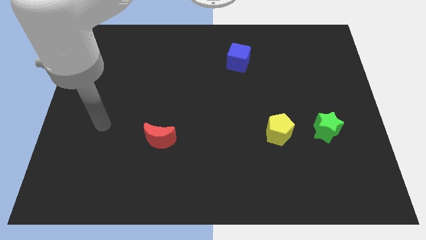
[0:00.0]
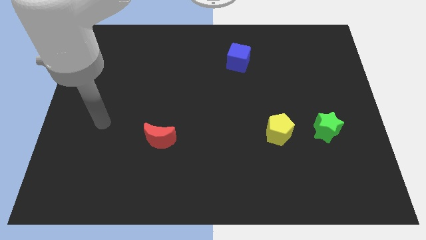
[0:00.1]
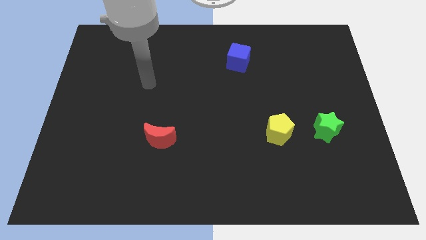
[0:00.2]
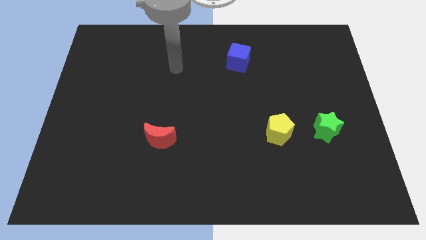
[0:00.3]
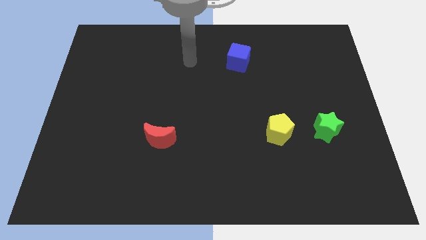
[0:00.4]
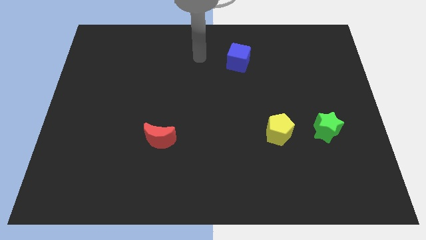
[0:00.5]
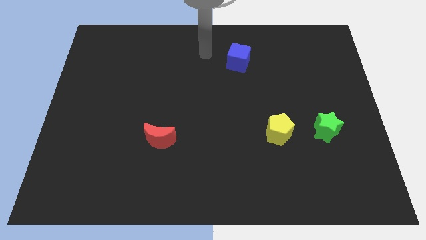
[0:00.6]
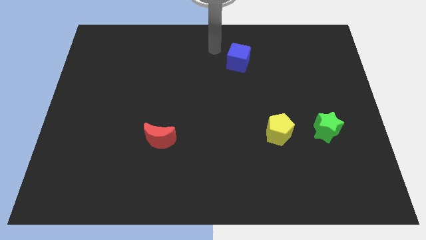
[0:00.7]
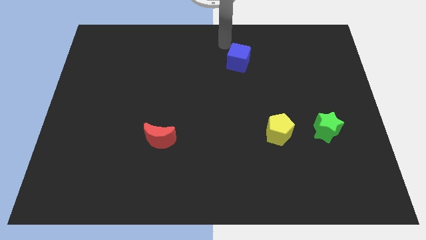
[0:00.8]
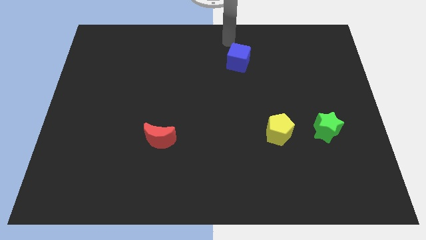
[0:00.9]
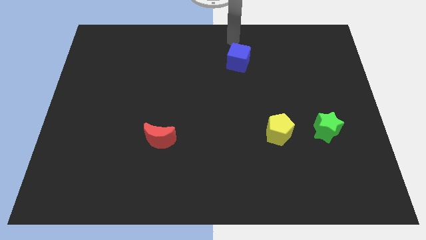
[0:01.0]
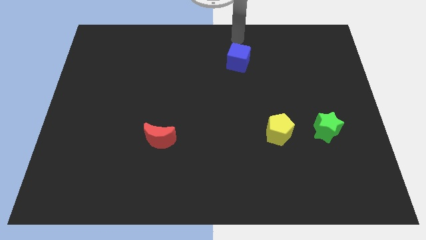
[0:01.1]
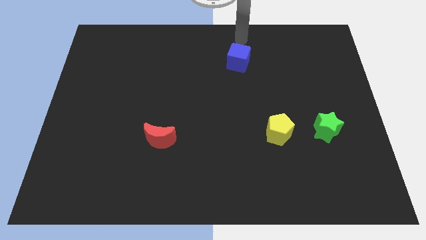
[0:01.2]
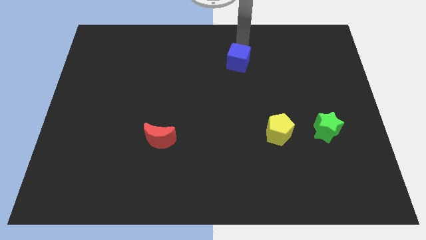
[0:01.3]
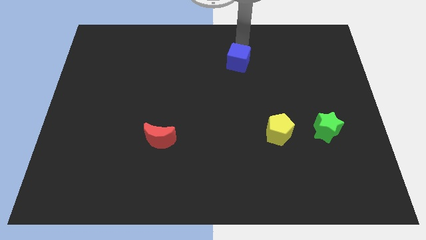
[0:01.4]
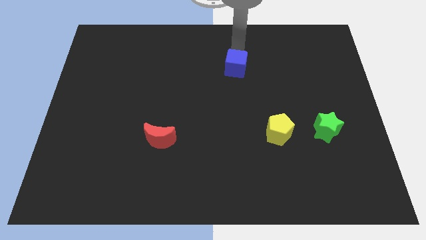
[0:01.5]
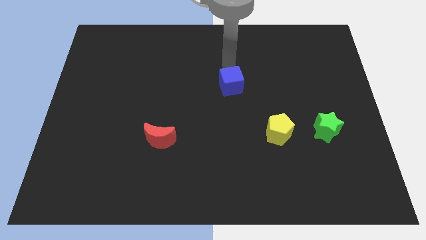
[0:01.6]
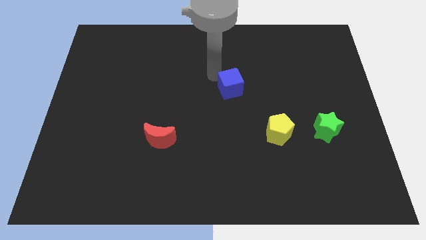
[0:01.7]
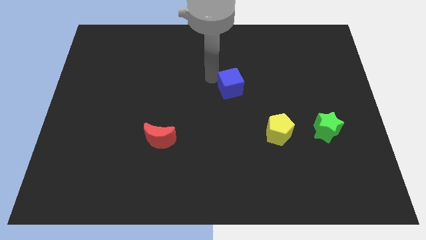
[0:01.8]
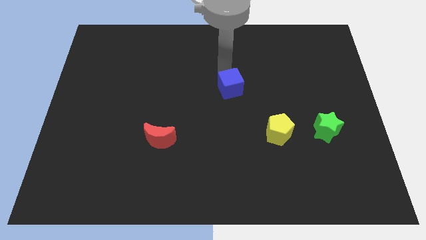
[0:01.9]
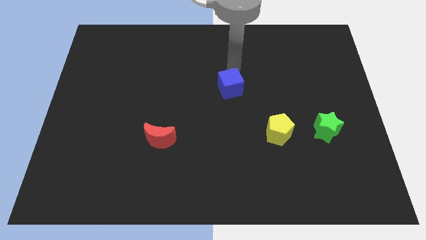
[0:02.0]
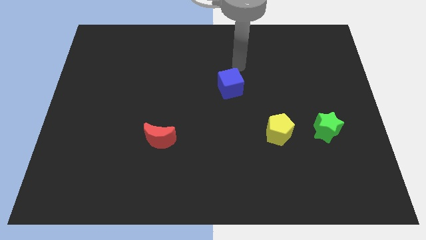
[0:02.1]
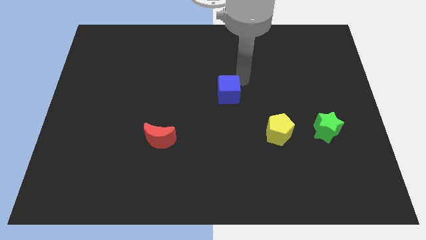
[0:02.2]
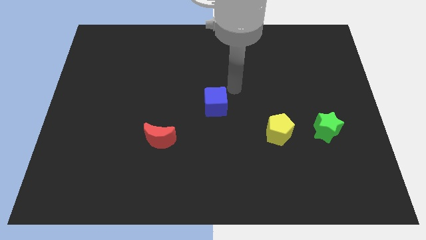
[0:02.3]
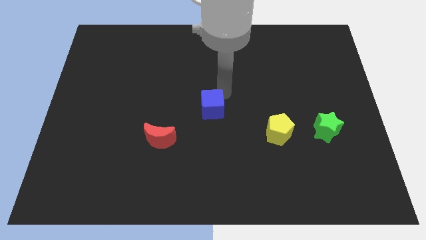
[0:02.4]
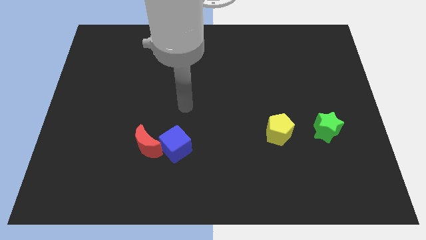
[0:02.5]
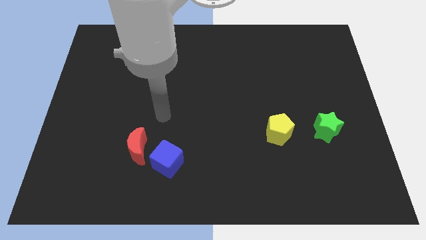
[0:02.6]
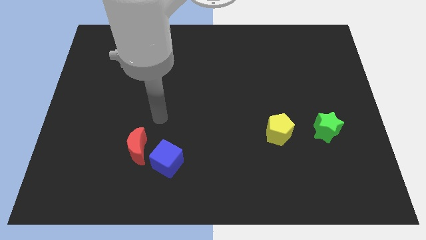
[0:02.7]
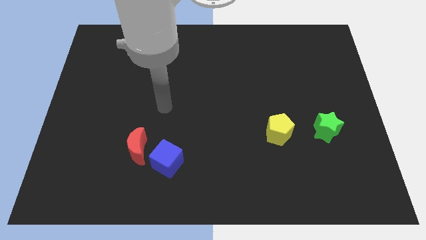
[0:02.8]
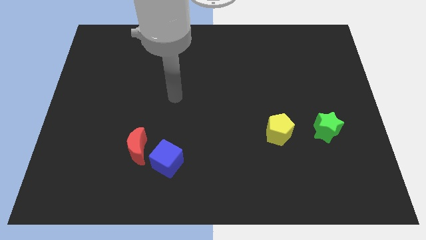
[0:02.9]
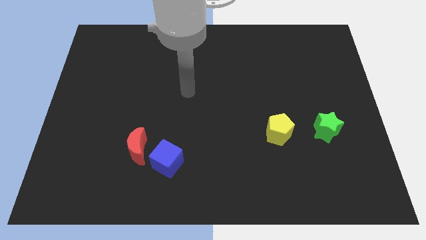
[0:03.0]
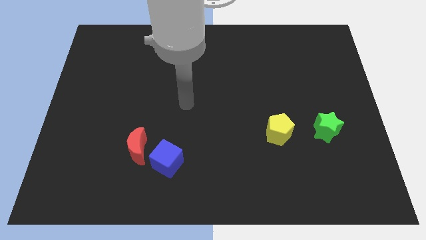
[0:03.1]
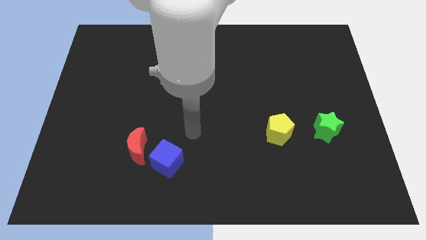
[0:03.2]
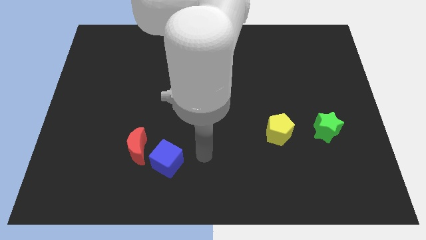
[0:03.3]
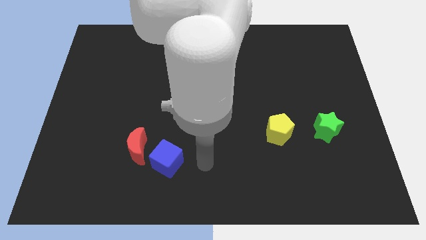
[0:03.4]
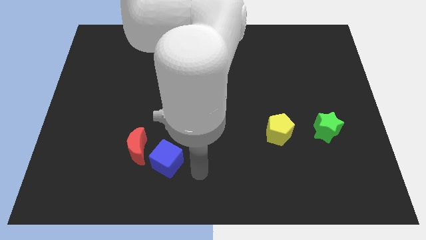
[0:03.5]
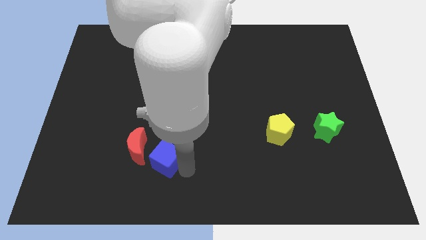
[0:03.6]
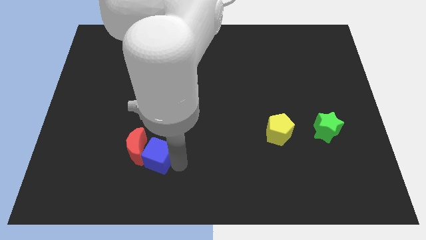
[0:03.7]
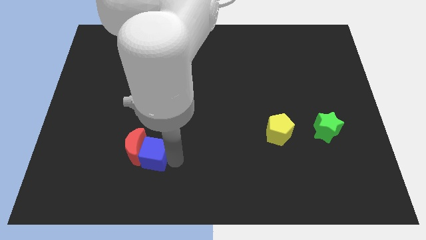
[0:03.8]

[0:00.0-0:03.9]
put the cube to the red moon

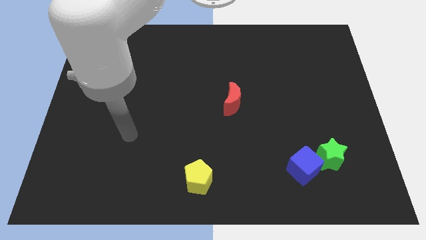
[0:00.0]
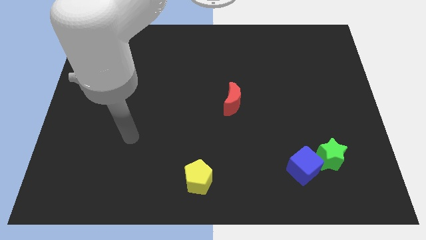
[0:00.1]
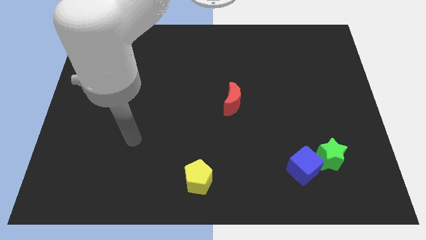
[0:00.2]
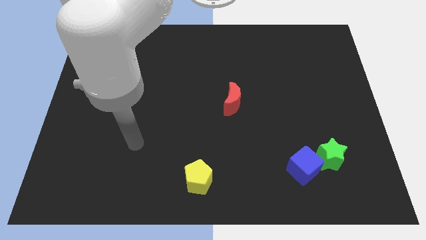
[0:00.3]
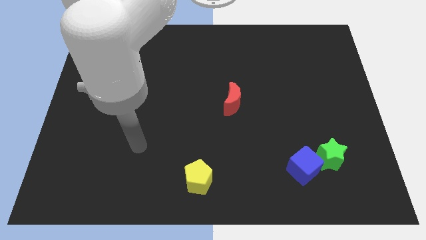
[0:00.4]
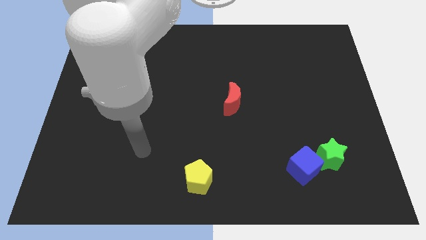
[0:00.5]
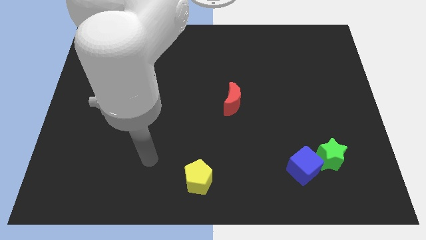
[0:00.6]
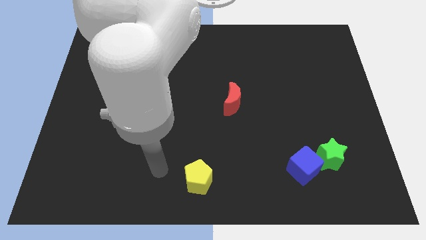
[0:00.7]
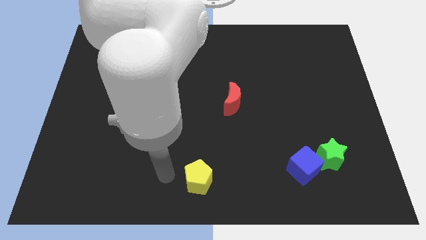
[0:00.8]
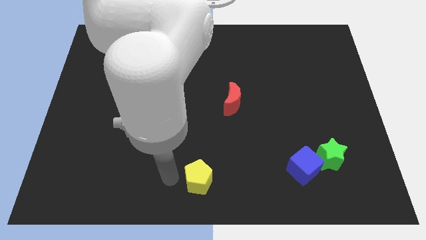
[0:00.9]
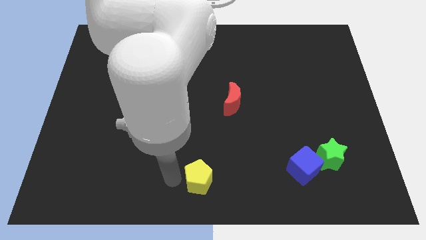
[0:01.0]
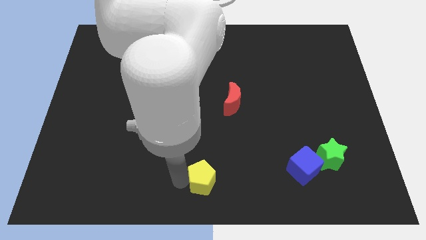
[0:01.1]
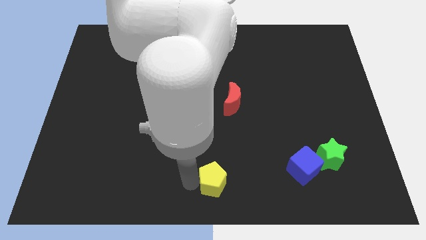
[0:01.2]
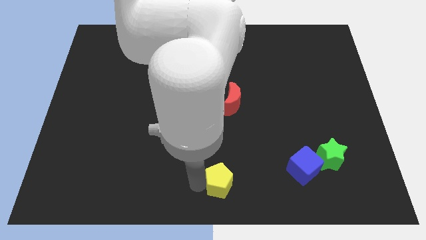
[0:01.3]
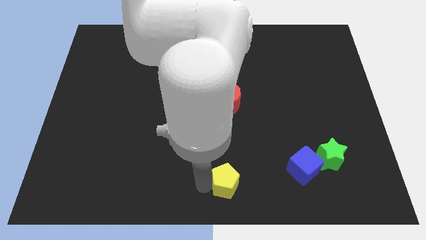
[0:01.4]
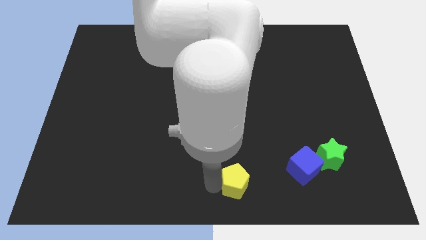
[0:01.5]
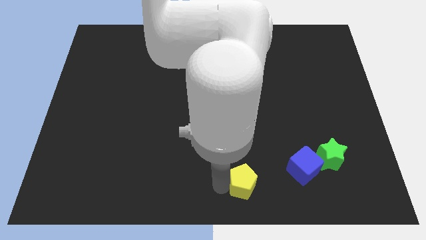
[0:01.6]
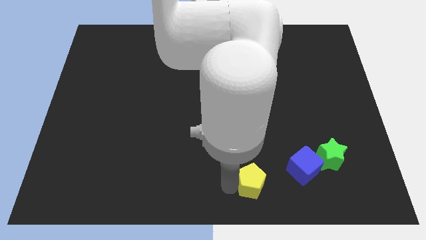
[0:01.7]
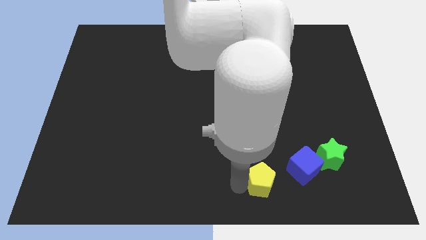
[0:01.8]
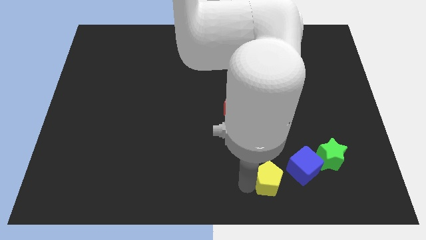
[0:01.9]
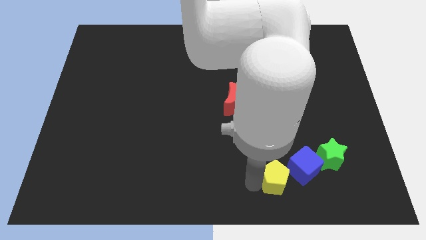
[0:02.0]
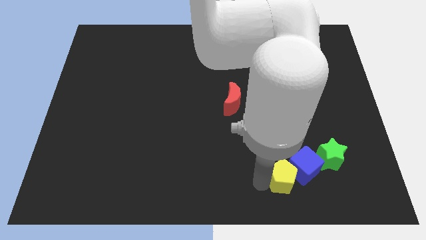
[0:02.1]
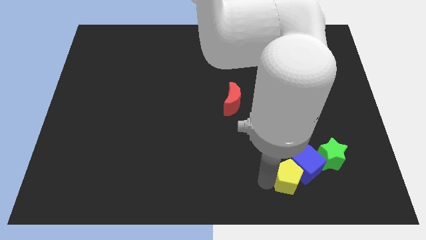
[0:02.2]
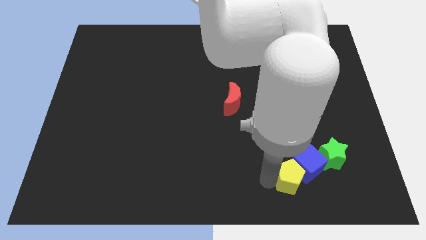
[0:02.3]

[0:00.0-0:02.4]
slide the yellow block to the blue cube

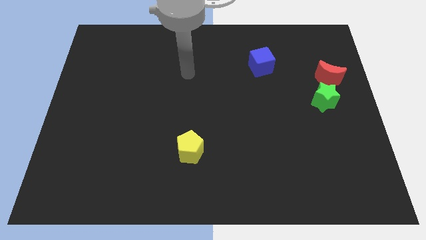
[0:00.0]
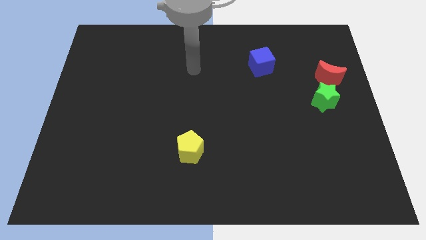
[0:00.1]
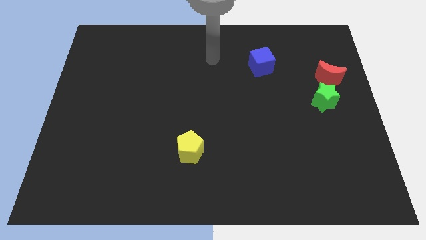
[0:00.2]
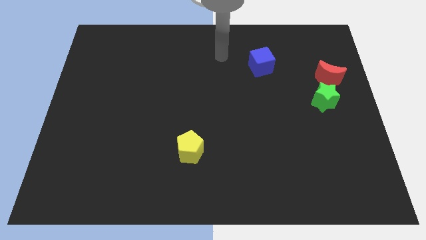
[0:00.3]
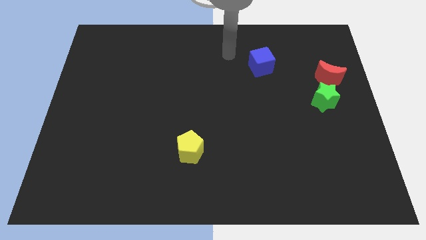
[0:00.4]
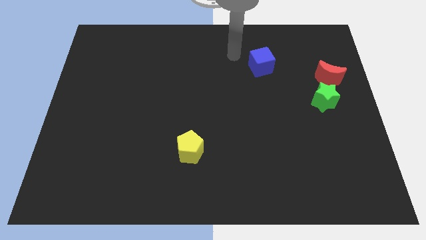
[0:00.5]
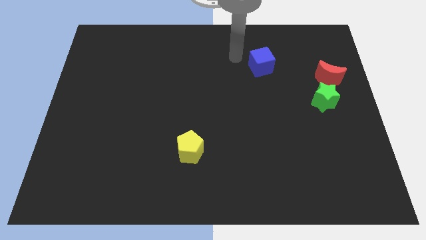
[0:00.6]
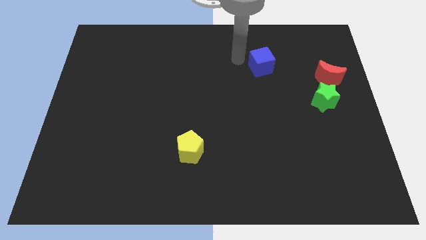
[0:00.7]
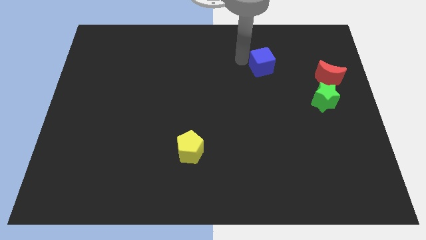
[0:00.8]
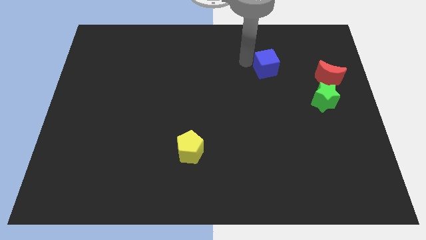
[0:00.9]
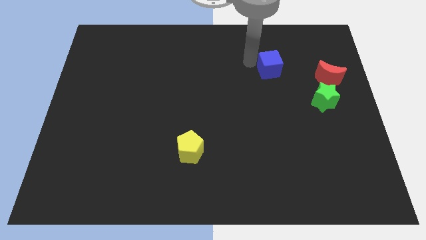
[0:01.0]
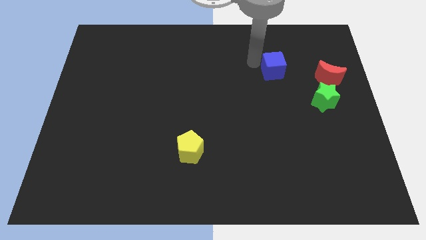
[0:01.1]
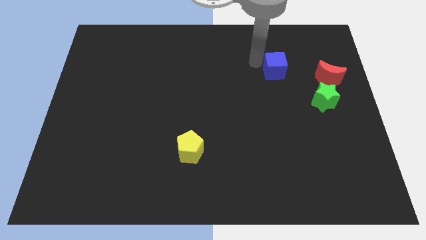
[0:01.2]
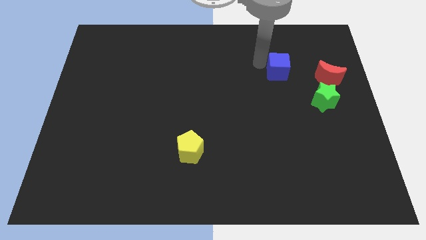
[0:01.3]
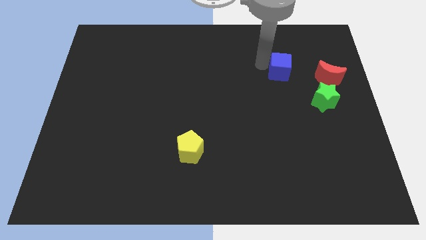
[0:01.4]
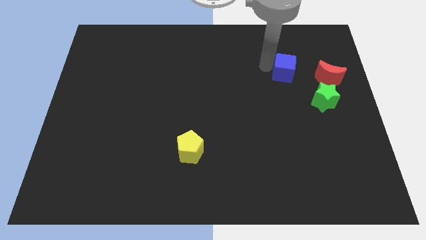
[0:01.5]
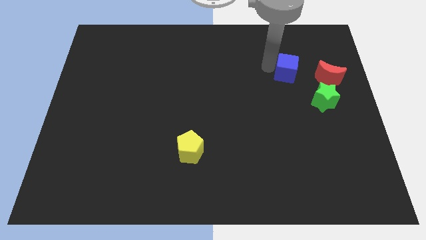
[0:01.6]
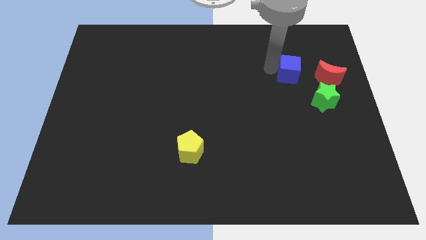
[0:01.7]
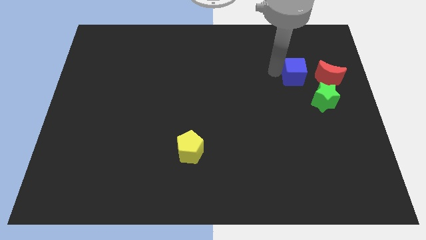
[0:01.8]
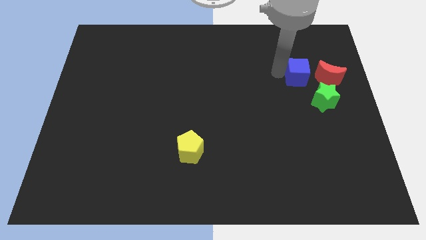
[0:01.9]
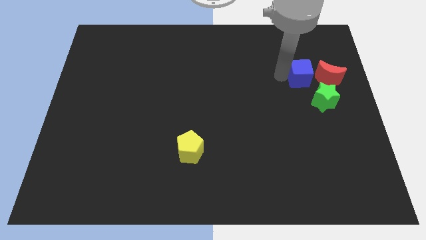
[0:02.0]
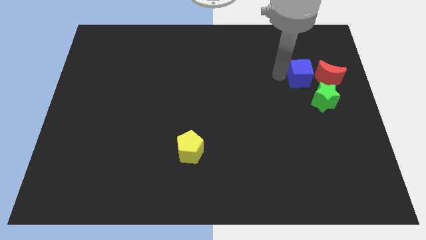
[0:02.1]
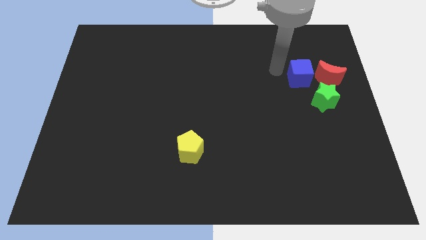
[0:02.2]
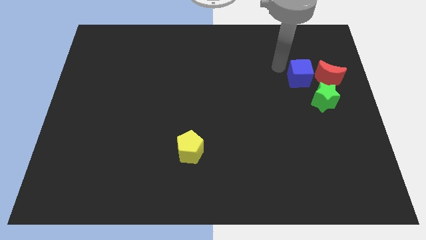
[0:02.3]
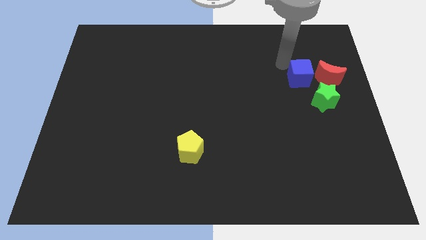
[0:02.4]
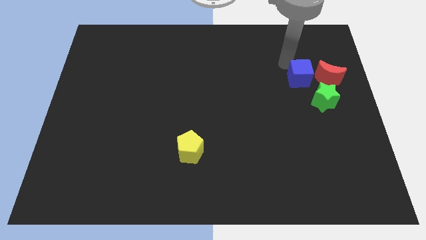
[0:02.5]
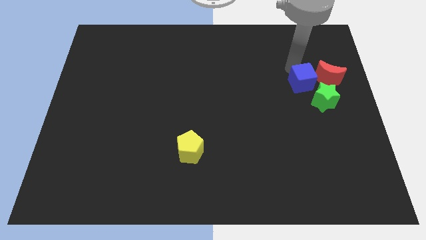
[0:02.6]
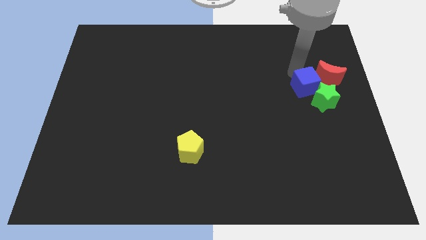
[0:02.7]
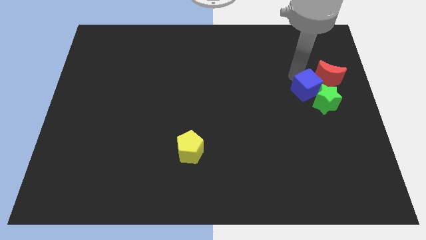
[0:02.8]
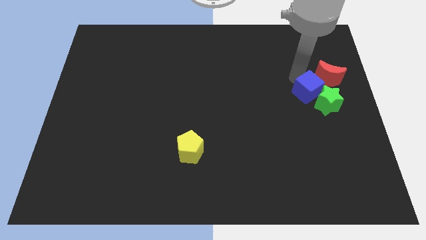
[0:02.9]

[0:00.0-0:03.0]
slide the blue cube next to the green star
